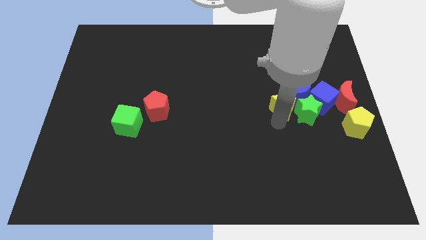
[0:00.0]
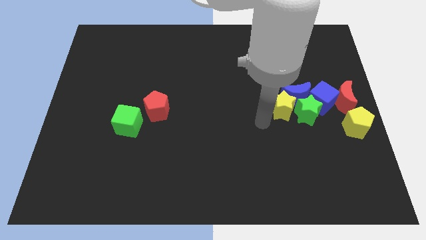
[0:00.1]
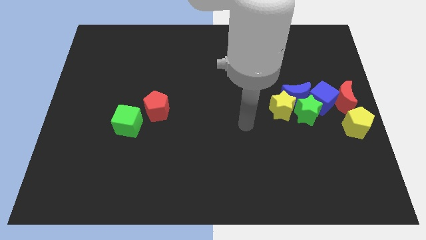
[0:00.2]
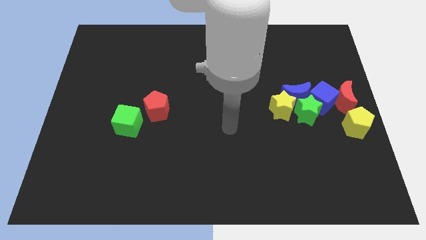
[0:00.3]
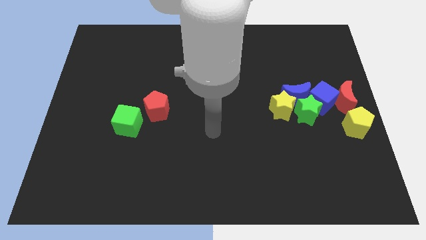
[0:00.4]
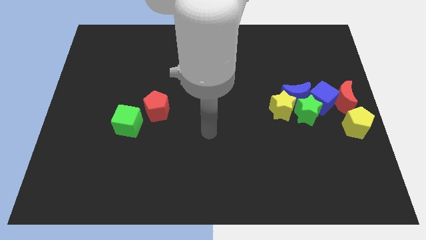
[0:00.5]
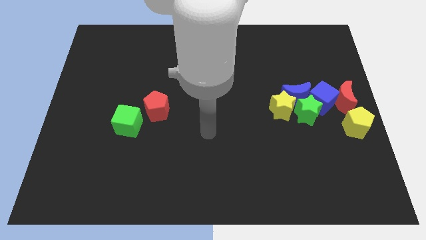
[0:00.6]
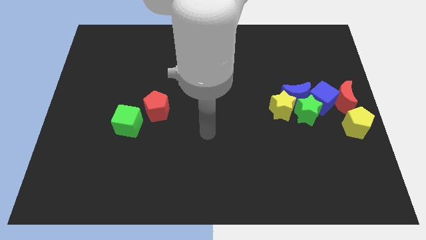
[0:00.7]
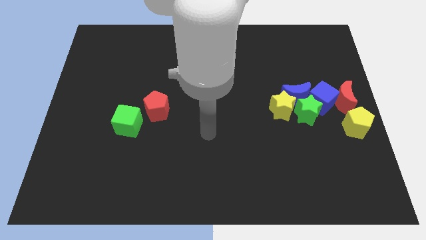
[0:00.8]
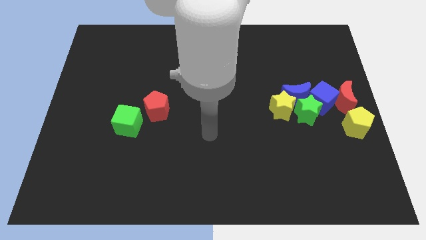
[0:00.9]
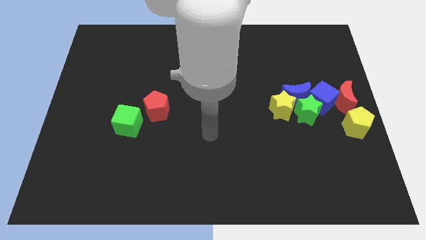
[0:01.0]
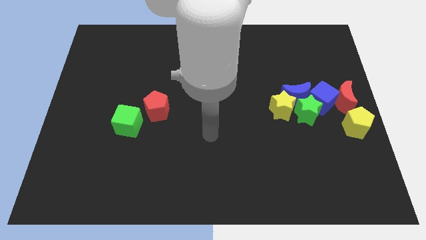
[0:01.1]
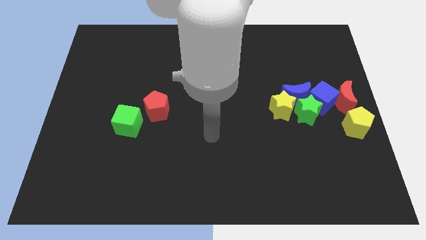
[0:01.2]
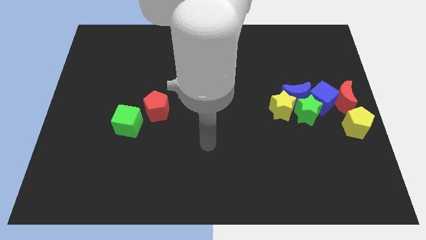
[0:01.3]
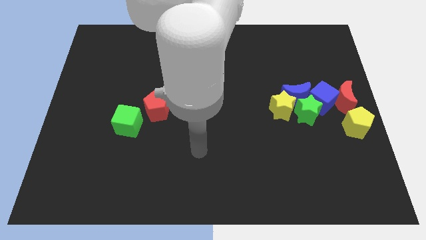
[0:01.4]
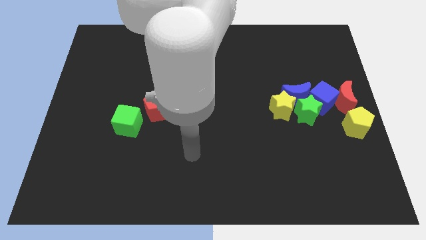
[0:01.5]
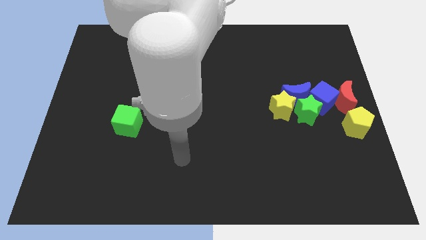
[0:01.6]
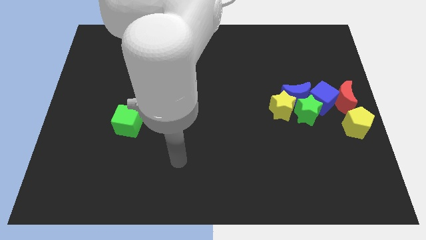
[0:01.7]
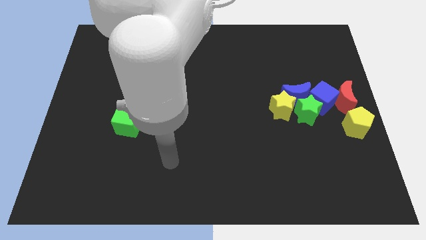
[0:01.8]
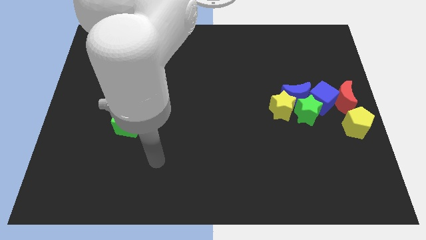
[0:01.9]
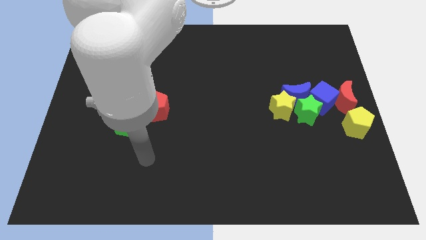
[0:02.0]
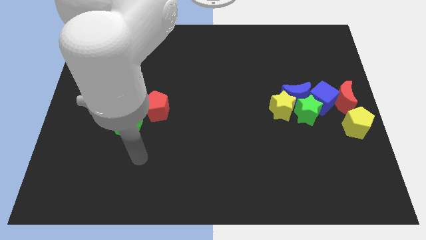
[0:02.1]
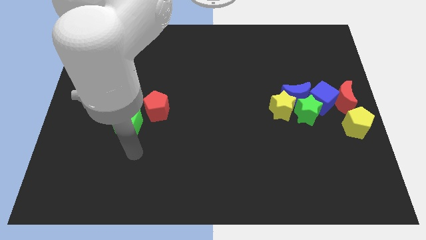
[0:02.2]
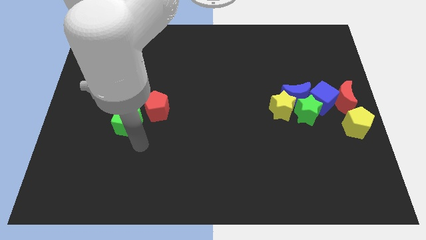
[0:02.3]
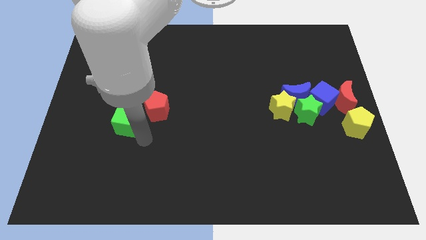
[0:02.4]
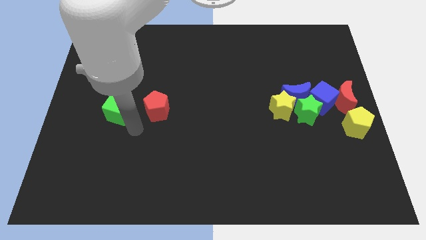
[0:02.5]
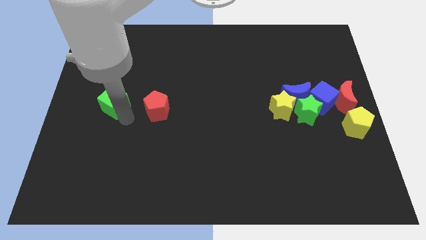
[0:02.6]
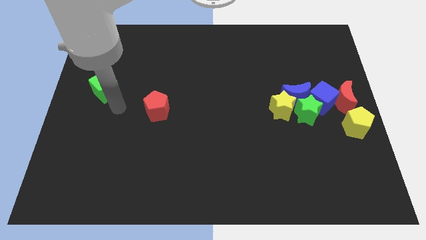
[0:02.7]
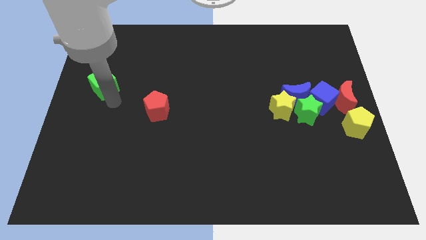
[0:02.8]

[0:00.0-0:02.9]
drag the green cube slightly upwards

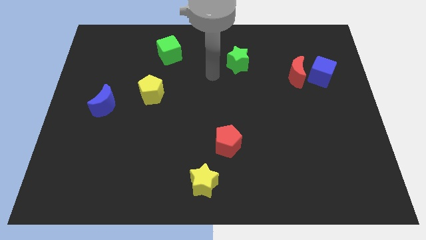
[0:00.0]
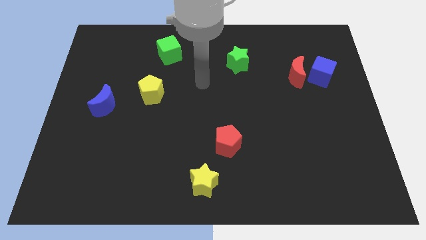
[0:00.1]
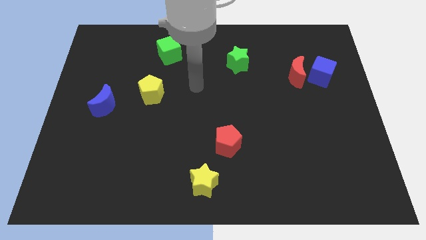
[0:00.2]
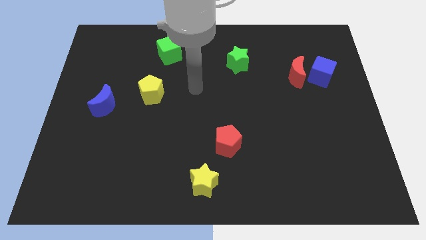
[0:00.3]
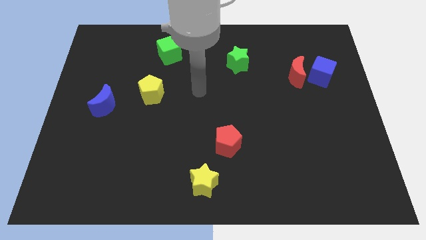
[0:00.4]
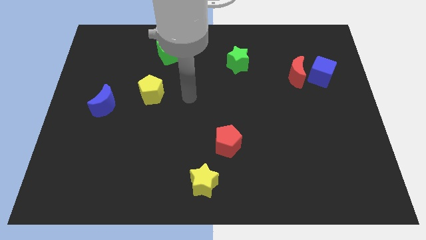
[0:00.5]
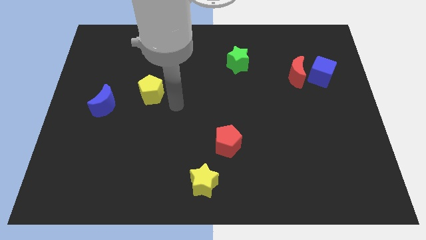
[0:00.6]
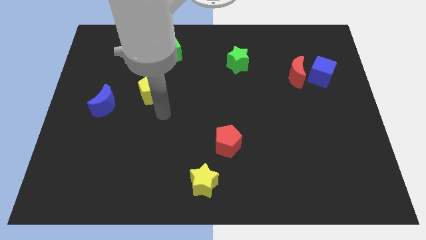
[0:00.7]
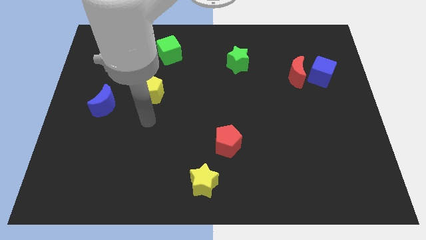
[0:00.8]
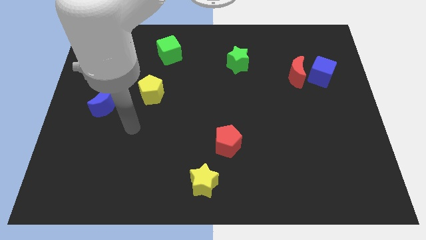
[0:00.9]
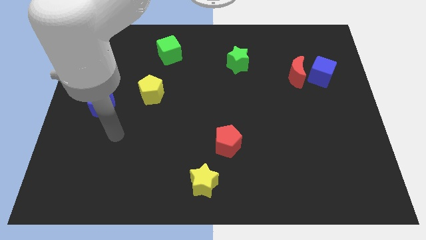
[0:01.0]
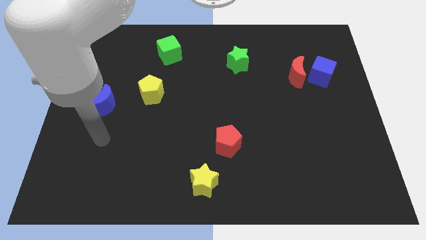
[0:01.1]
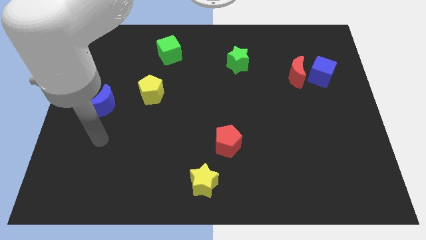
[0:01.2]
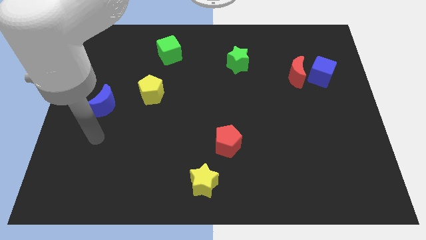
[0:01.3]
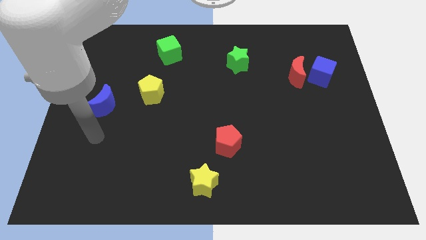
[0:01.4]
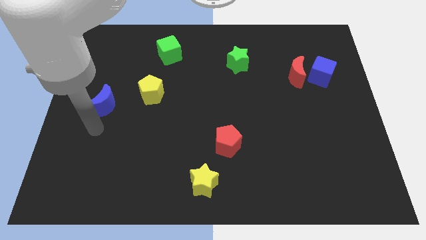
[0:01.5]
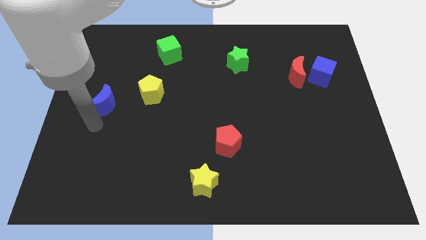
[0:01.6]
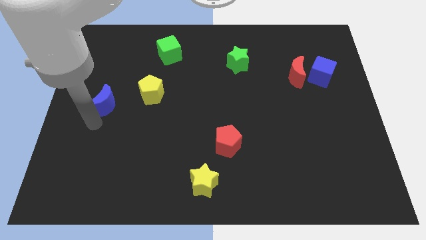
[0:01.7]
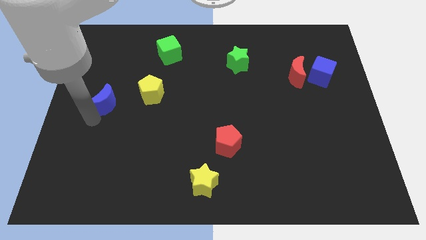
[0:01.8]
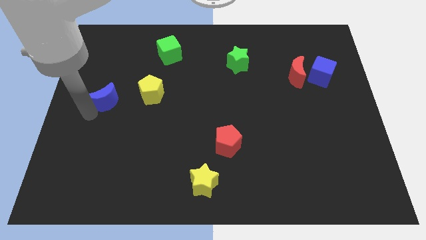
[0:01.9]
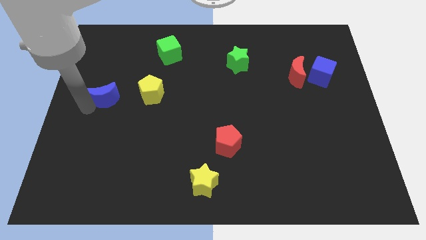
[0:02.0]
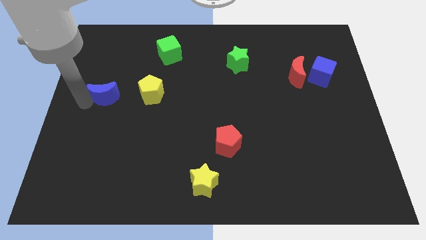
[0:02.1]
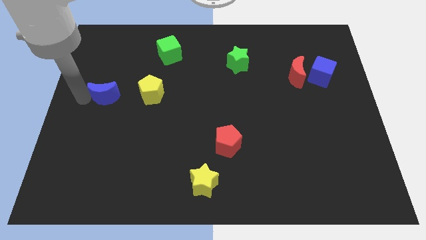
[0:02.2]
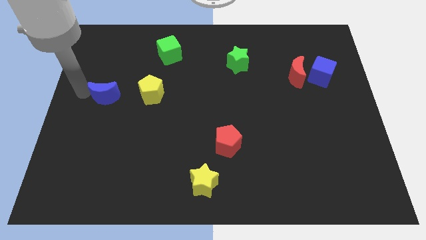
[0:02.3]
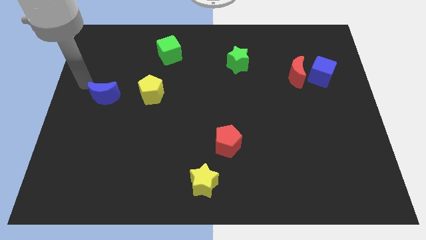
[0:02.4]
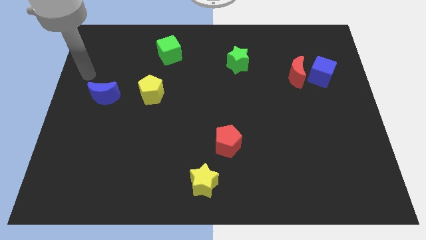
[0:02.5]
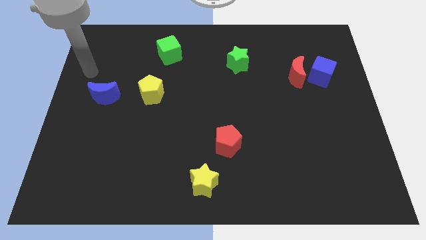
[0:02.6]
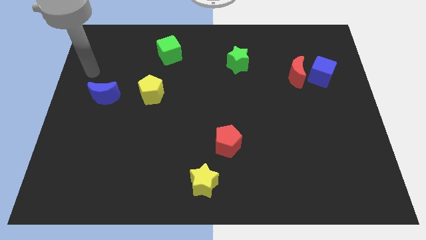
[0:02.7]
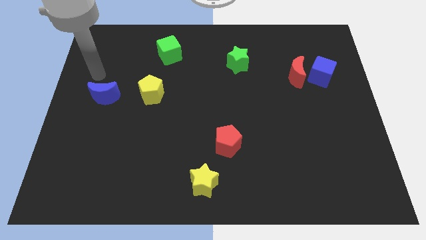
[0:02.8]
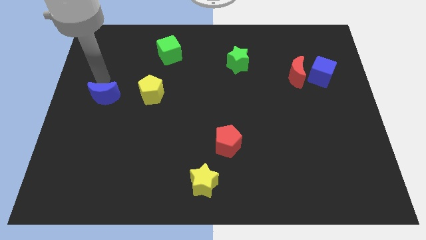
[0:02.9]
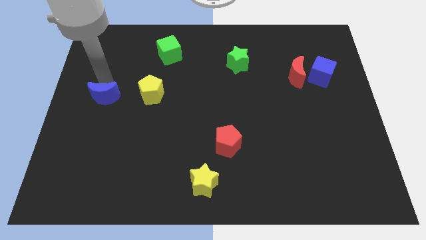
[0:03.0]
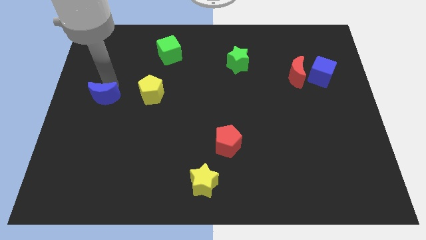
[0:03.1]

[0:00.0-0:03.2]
place the blue crescent to the left side of the yellow pentagon

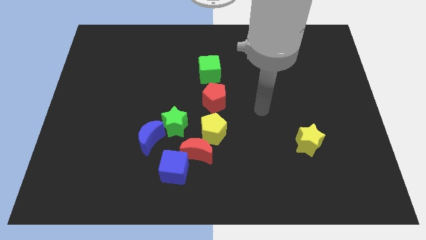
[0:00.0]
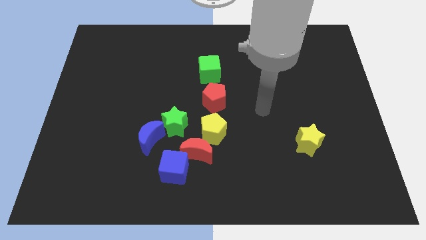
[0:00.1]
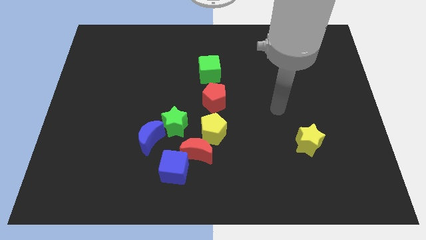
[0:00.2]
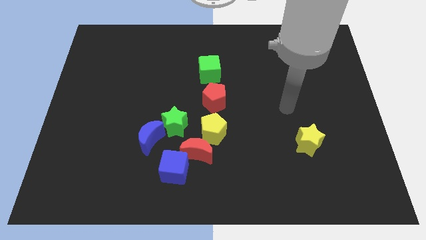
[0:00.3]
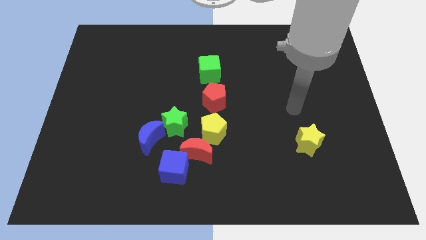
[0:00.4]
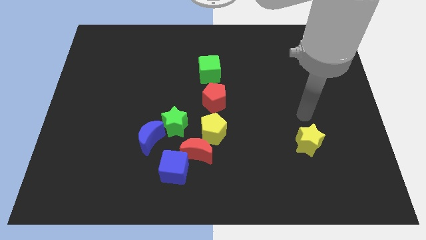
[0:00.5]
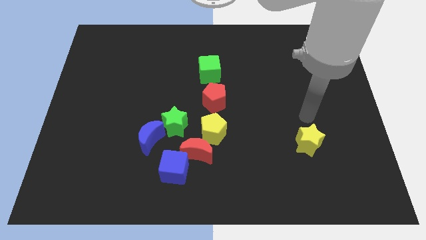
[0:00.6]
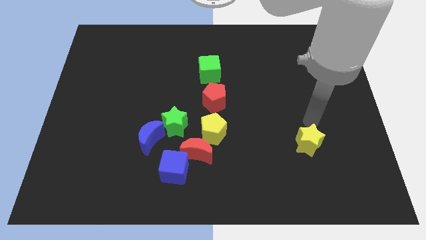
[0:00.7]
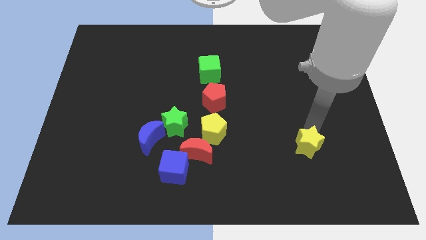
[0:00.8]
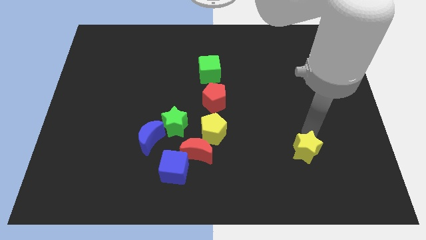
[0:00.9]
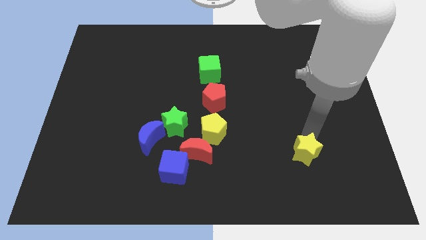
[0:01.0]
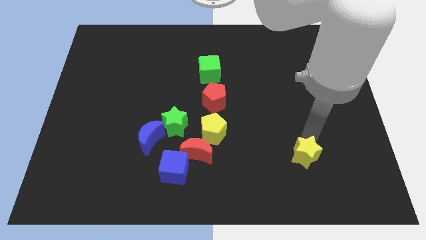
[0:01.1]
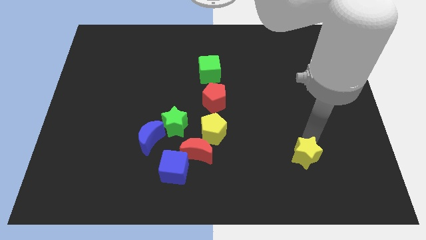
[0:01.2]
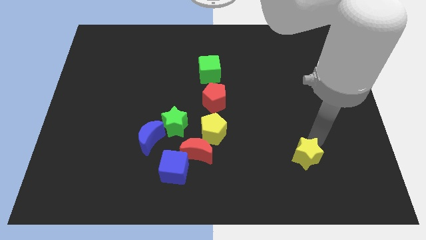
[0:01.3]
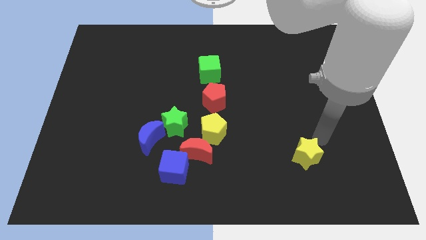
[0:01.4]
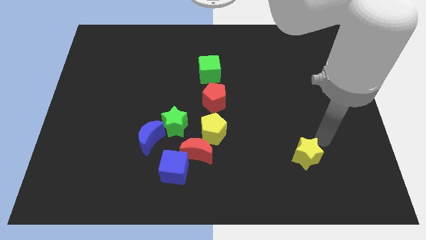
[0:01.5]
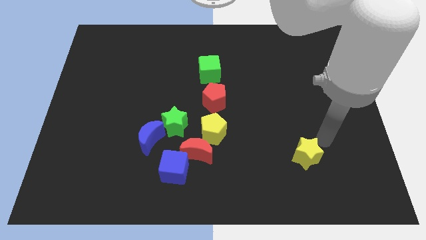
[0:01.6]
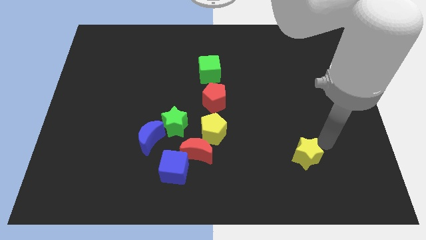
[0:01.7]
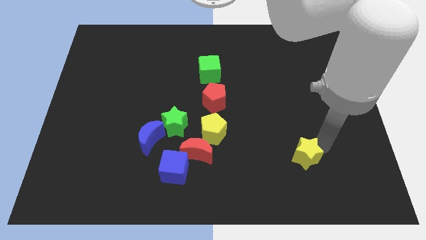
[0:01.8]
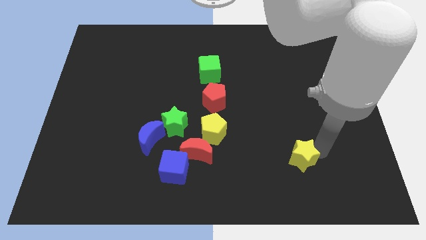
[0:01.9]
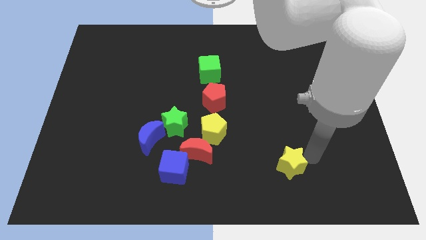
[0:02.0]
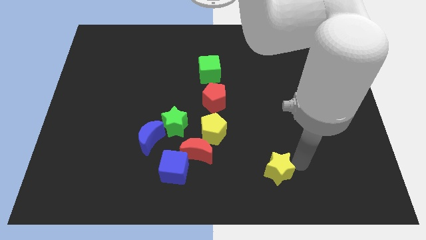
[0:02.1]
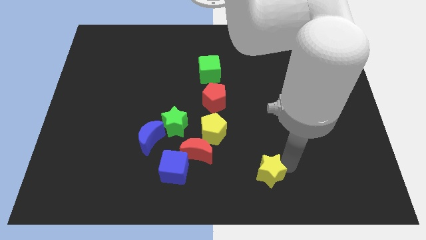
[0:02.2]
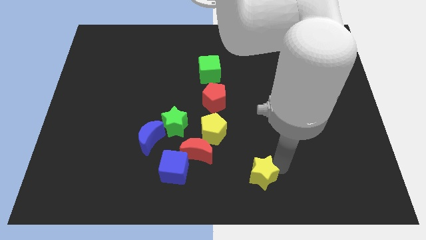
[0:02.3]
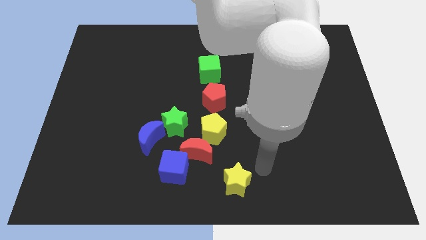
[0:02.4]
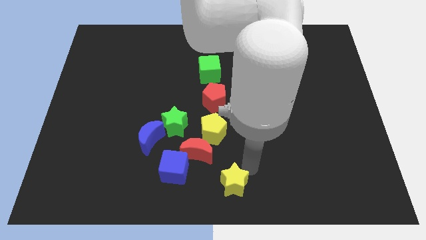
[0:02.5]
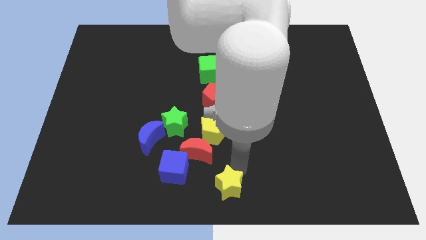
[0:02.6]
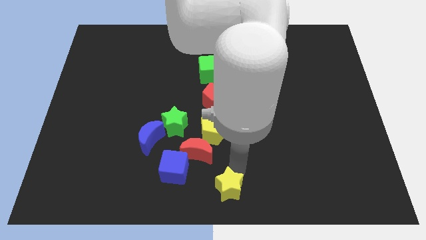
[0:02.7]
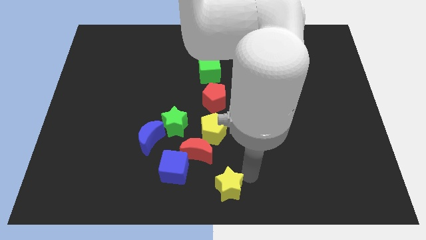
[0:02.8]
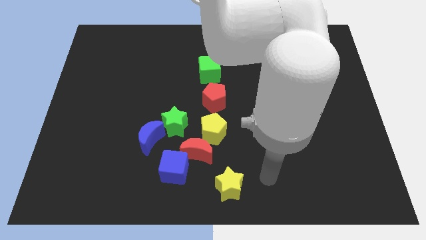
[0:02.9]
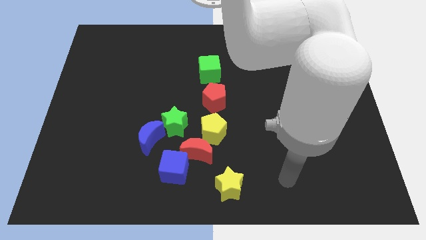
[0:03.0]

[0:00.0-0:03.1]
move yellow star towards bottom center
